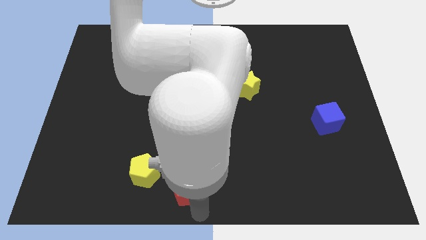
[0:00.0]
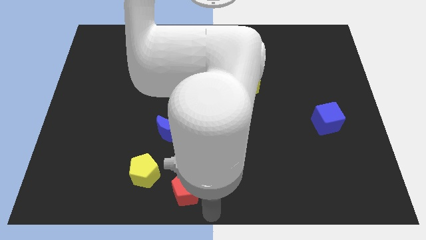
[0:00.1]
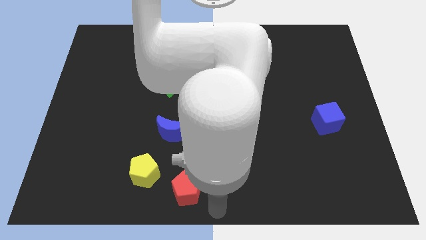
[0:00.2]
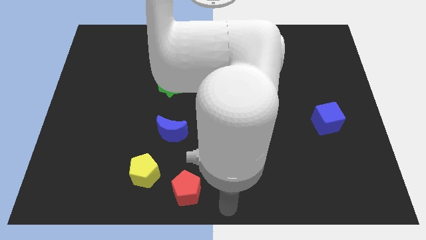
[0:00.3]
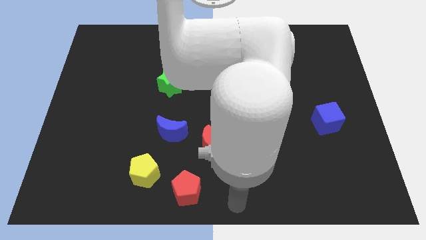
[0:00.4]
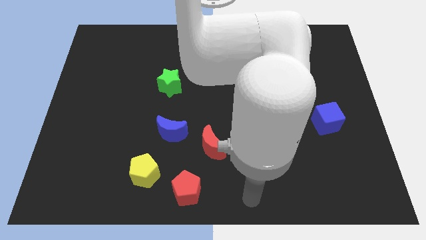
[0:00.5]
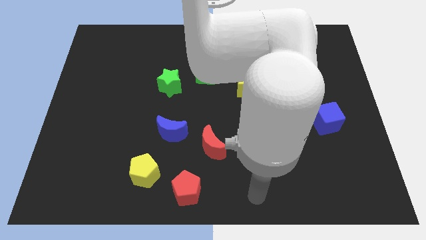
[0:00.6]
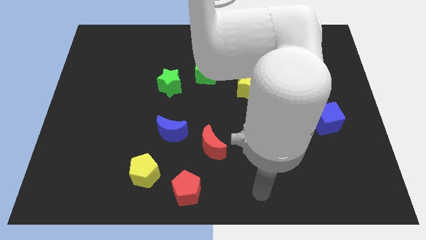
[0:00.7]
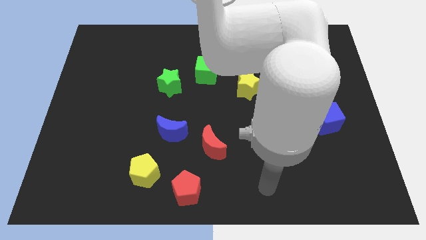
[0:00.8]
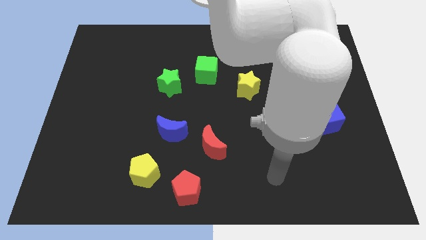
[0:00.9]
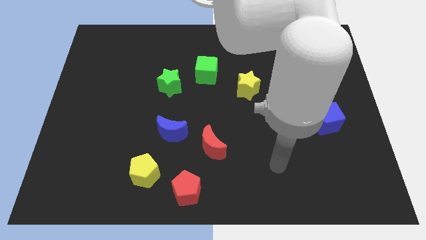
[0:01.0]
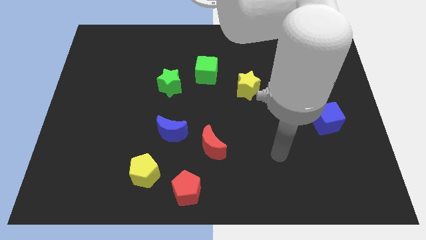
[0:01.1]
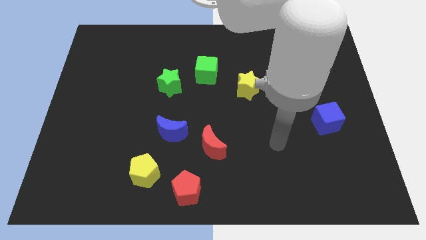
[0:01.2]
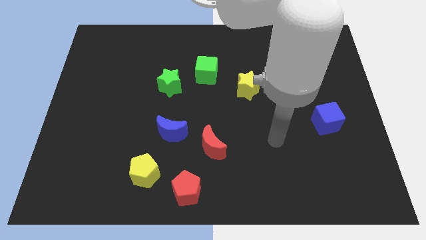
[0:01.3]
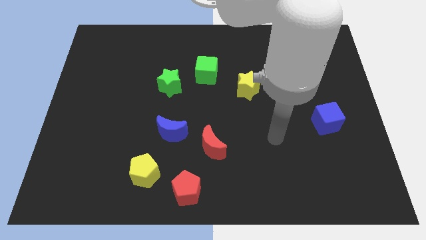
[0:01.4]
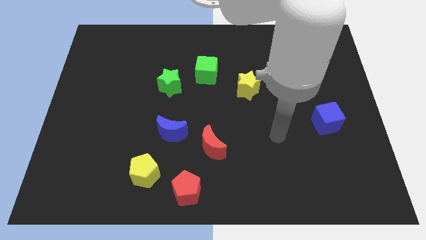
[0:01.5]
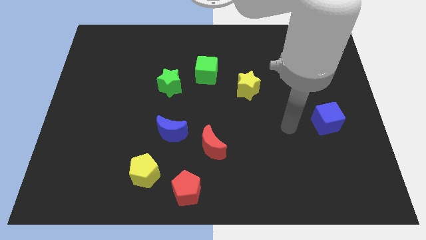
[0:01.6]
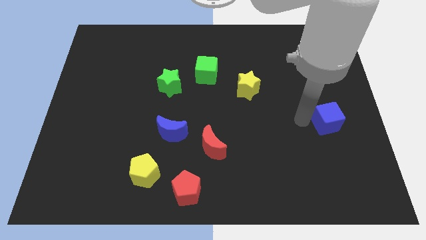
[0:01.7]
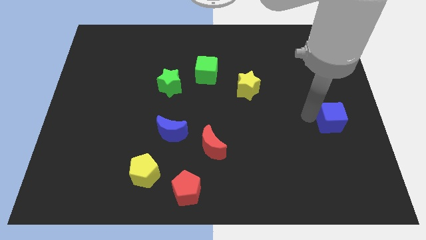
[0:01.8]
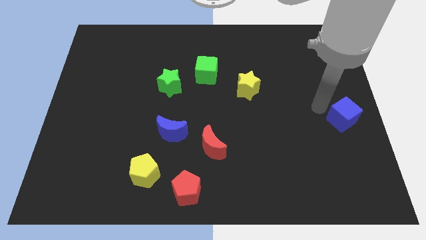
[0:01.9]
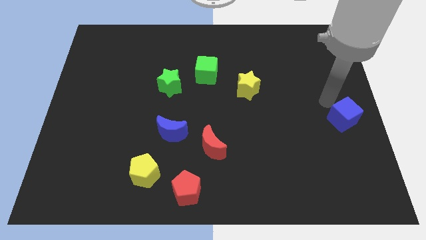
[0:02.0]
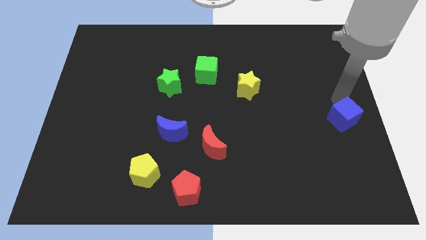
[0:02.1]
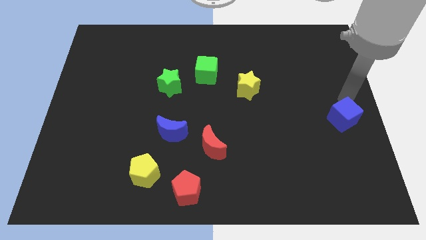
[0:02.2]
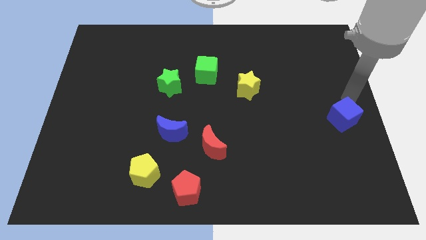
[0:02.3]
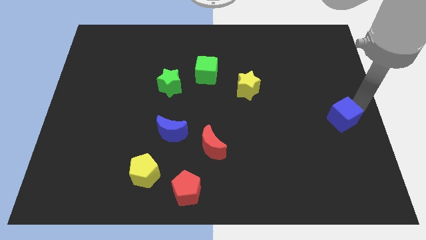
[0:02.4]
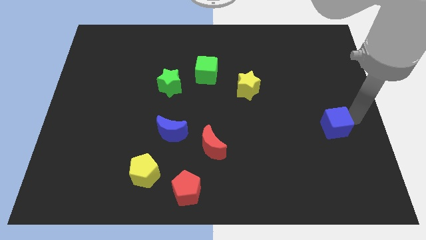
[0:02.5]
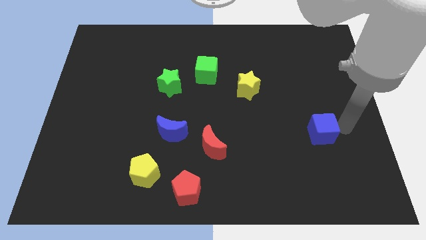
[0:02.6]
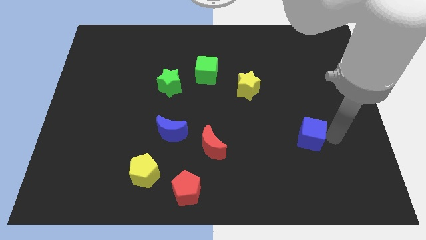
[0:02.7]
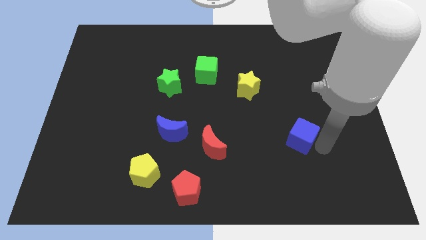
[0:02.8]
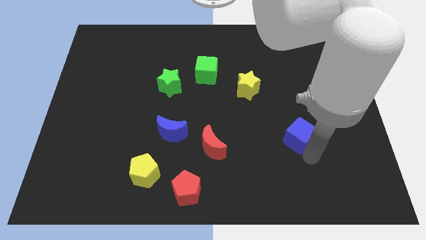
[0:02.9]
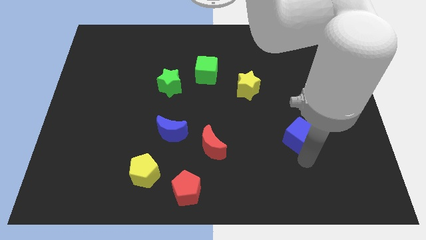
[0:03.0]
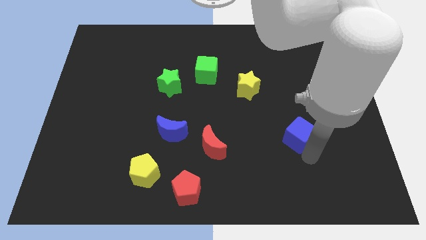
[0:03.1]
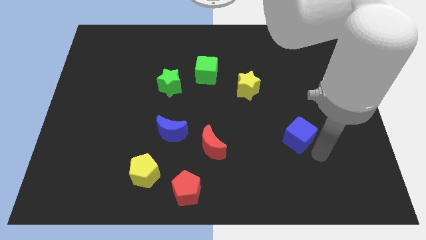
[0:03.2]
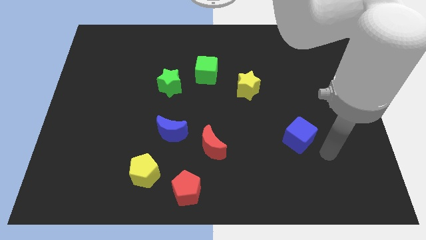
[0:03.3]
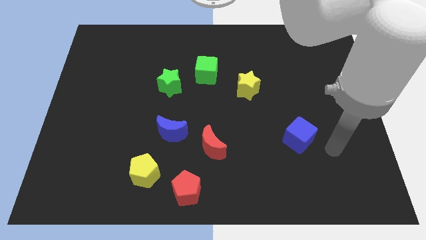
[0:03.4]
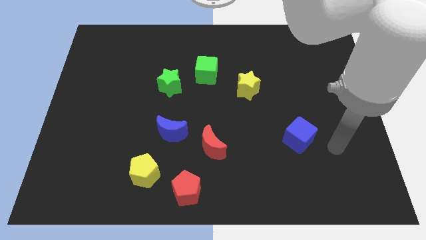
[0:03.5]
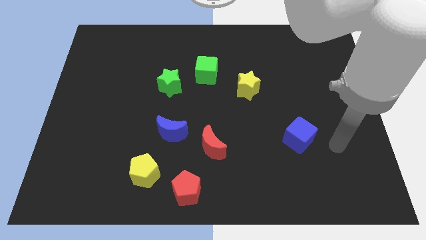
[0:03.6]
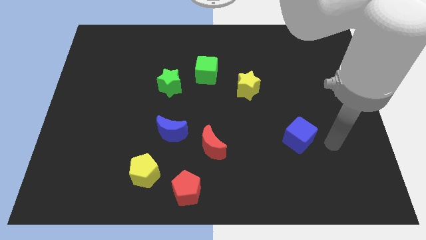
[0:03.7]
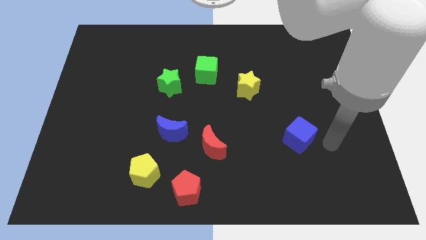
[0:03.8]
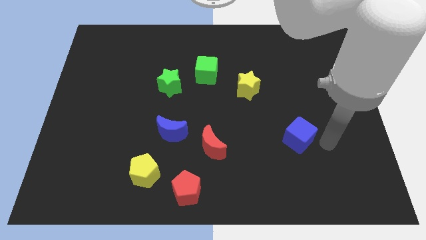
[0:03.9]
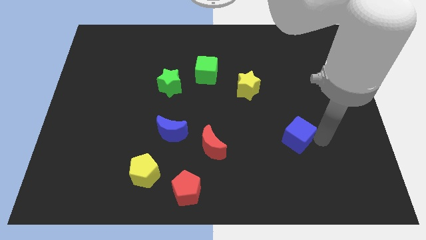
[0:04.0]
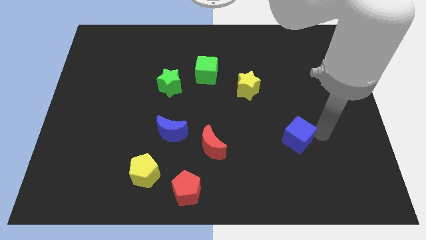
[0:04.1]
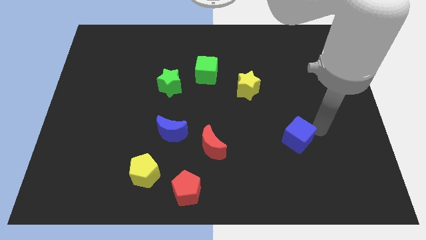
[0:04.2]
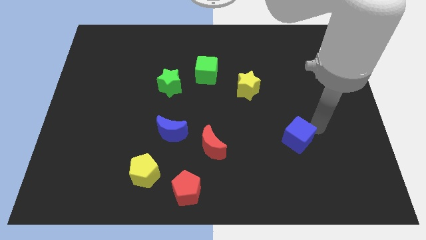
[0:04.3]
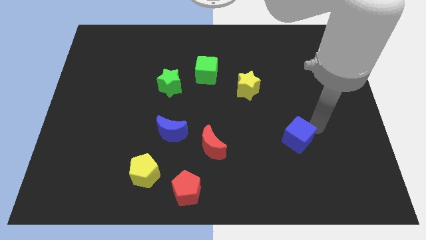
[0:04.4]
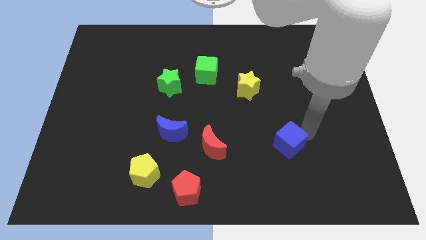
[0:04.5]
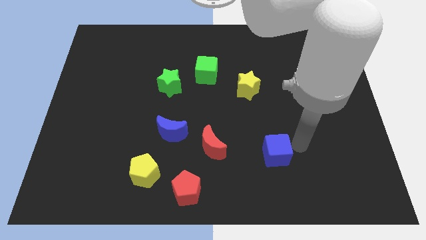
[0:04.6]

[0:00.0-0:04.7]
put the blue cube parallel to red moon

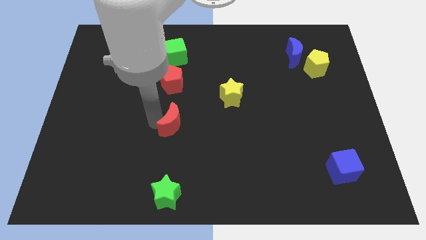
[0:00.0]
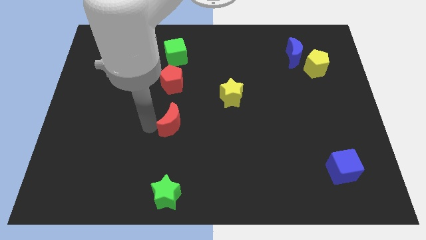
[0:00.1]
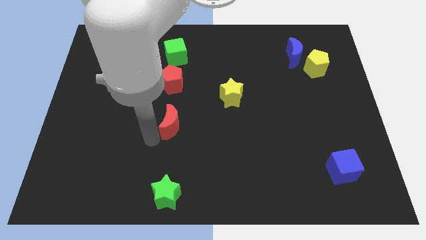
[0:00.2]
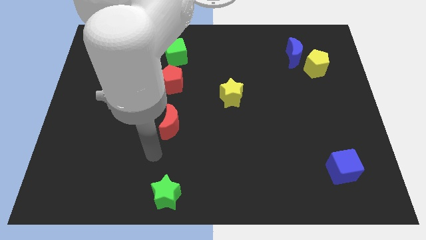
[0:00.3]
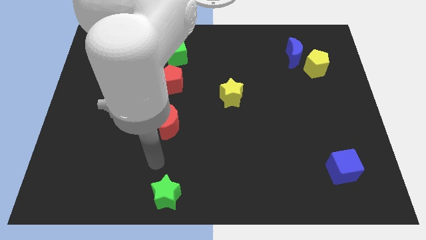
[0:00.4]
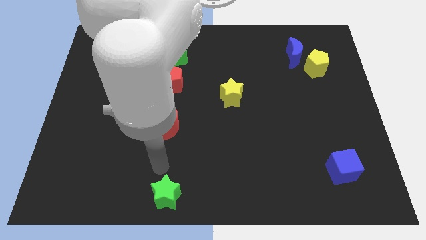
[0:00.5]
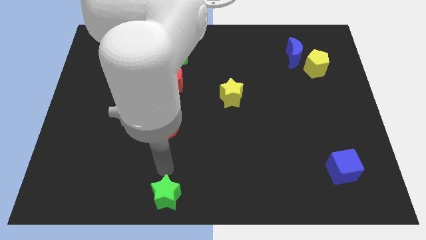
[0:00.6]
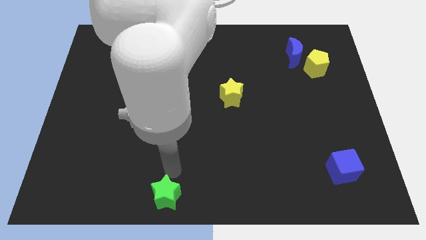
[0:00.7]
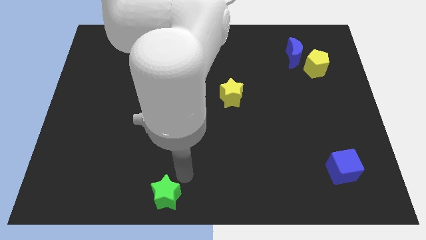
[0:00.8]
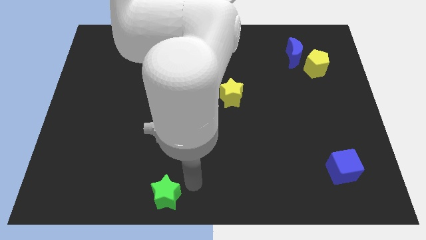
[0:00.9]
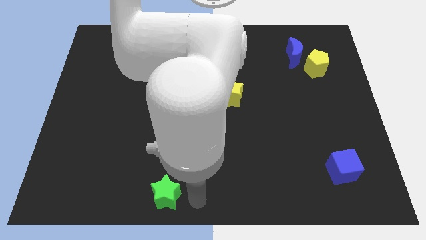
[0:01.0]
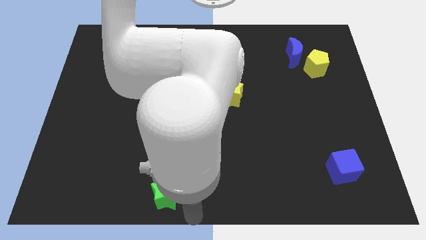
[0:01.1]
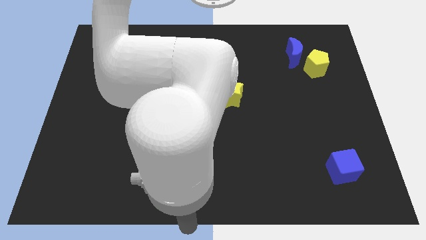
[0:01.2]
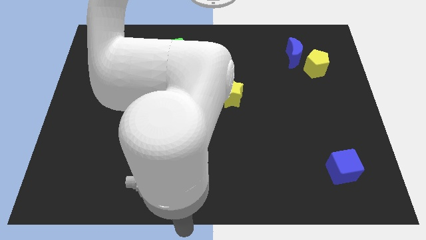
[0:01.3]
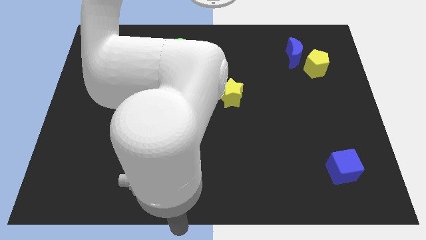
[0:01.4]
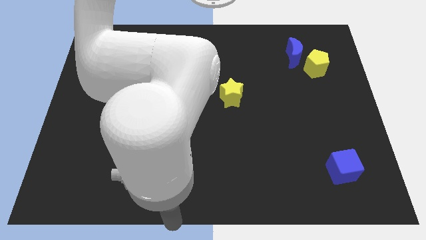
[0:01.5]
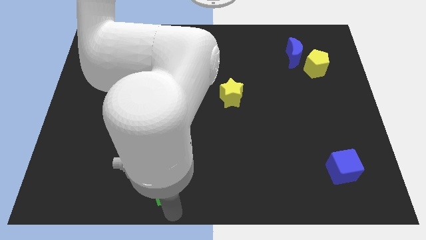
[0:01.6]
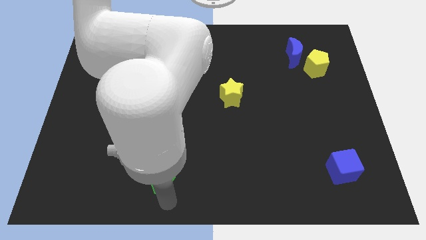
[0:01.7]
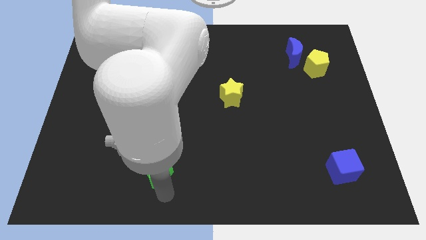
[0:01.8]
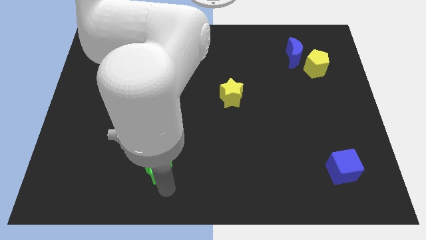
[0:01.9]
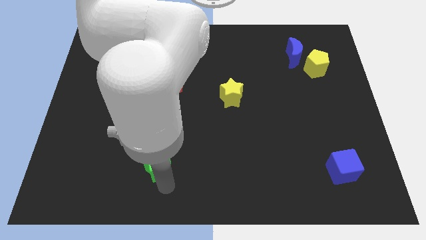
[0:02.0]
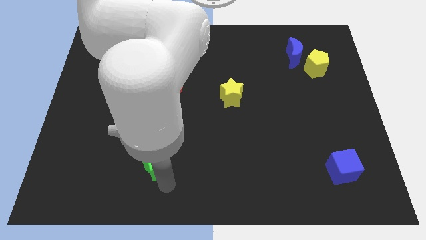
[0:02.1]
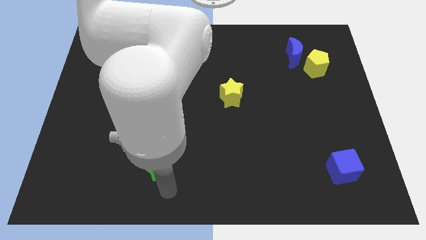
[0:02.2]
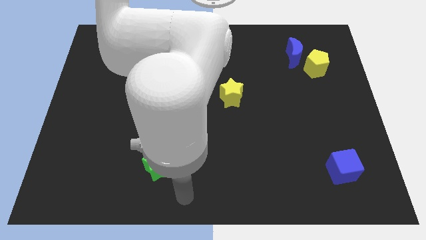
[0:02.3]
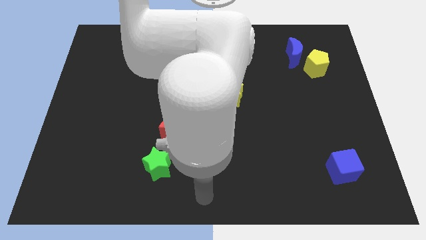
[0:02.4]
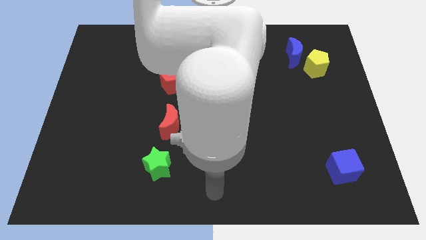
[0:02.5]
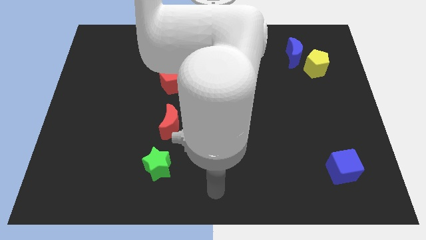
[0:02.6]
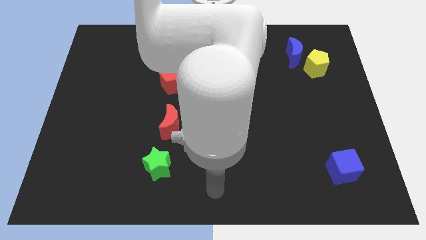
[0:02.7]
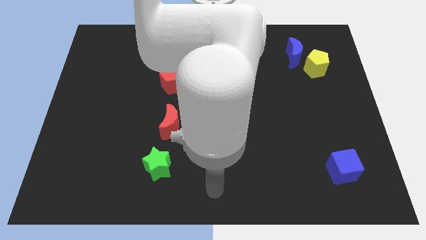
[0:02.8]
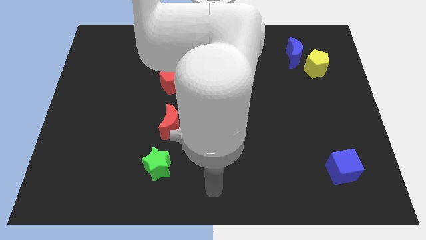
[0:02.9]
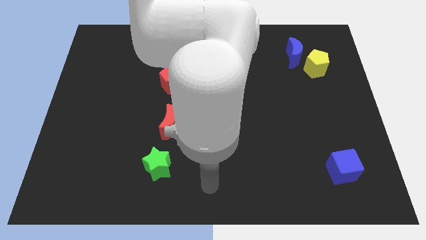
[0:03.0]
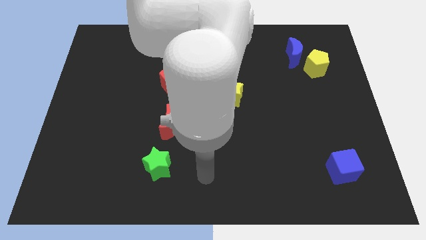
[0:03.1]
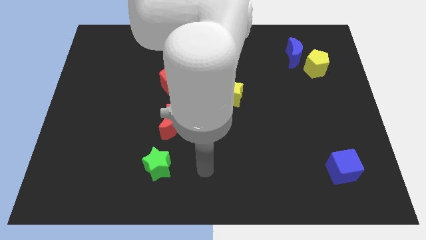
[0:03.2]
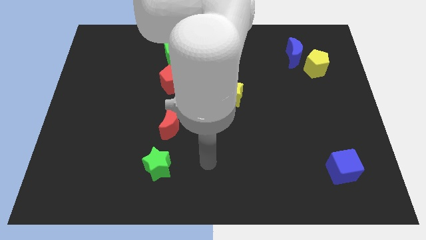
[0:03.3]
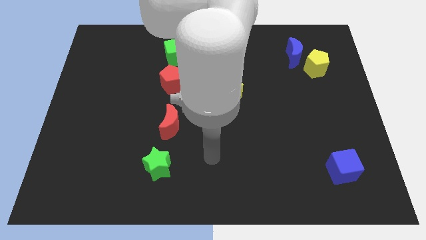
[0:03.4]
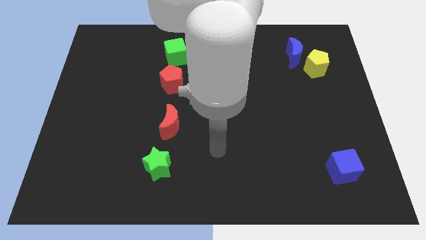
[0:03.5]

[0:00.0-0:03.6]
slide the green star slightly towards up

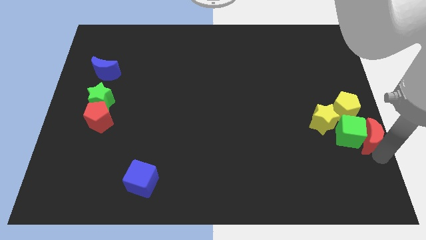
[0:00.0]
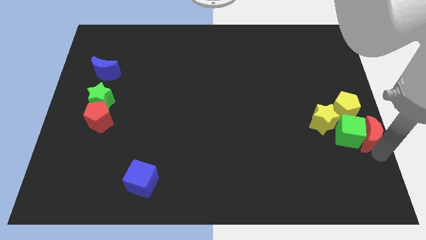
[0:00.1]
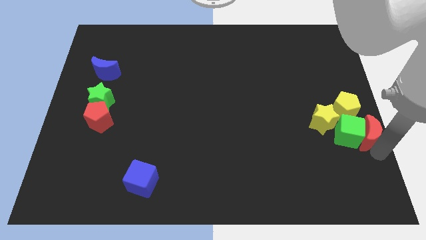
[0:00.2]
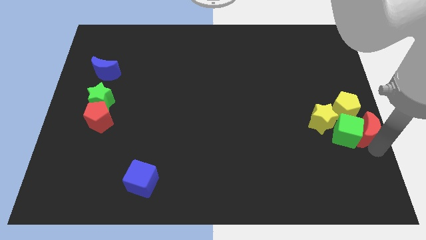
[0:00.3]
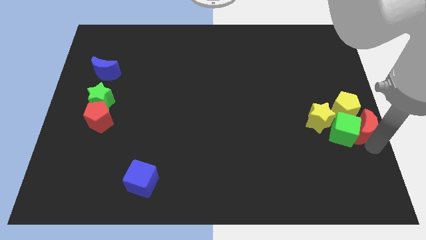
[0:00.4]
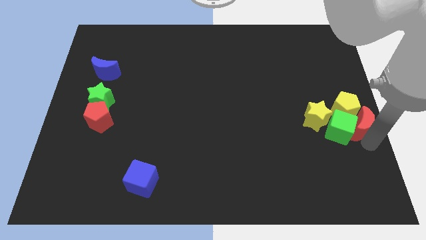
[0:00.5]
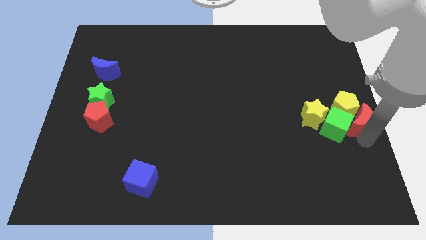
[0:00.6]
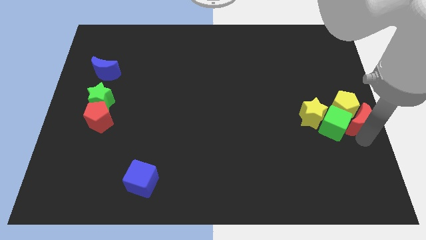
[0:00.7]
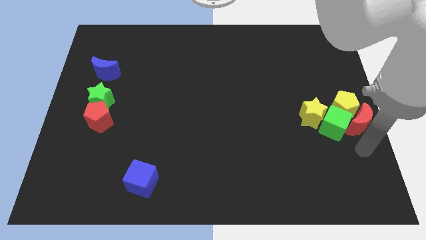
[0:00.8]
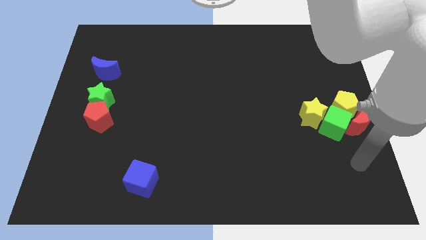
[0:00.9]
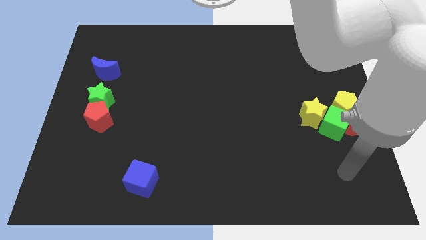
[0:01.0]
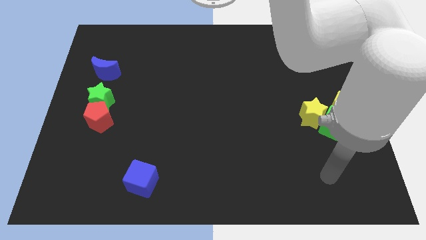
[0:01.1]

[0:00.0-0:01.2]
push the red crescent into the yellow pentagon
